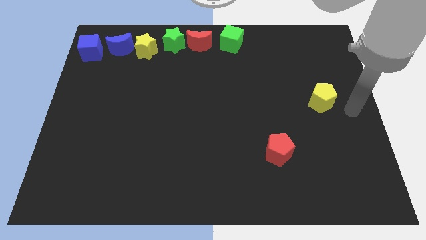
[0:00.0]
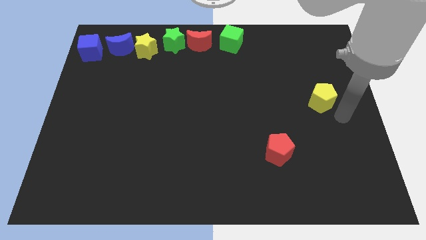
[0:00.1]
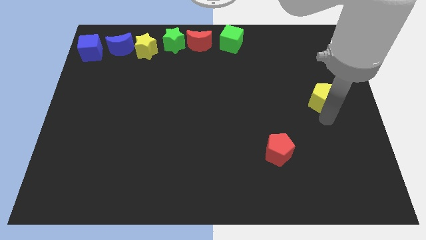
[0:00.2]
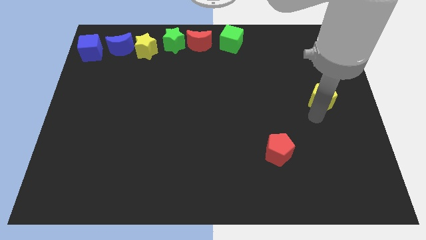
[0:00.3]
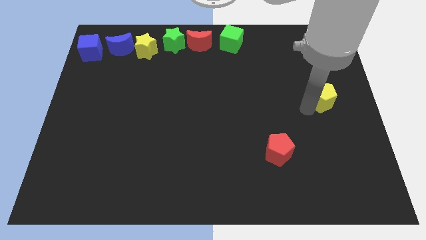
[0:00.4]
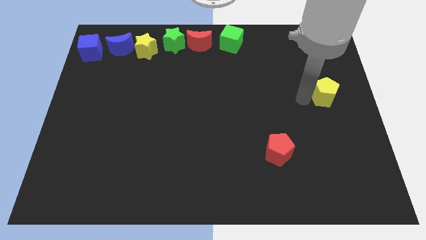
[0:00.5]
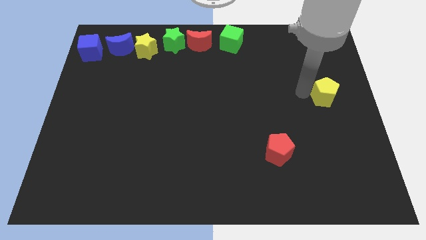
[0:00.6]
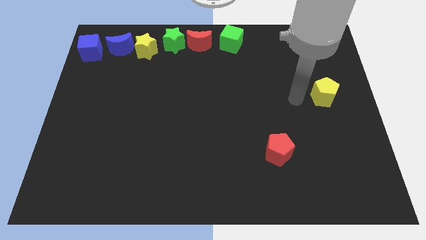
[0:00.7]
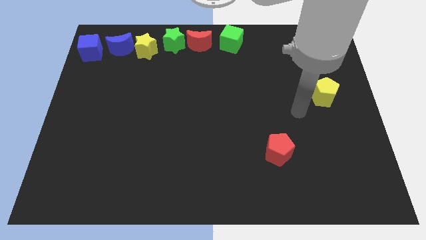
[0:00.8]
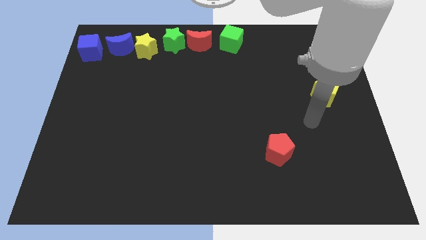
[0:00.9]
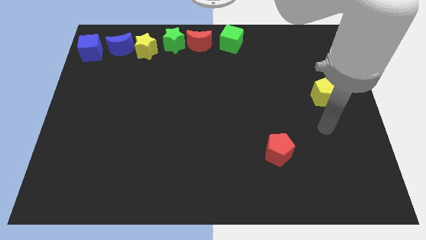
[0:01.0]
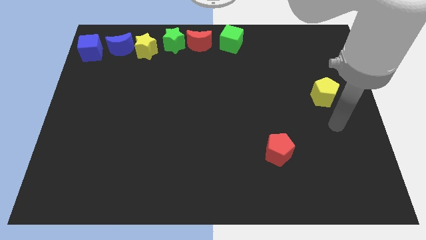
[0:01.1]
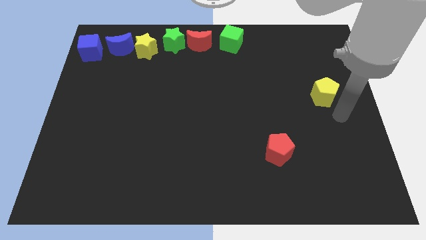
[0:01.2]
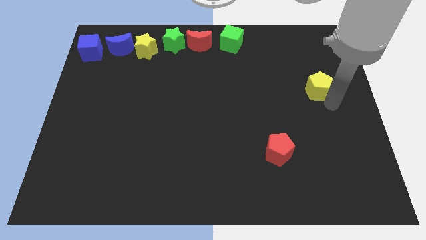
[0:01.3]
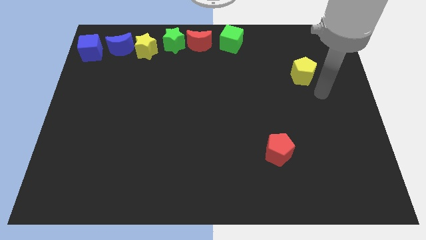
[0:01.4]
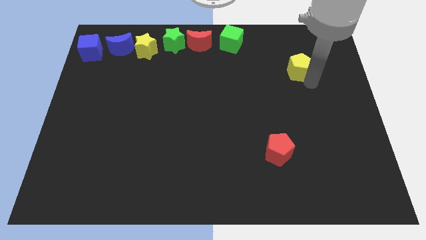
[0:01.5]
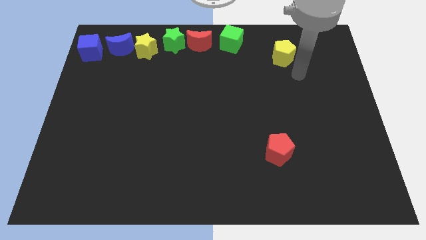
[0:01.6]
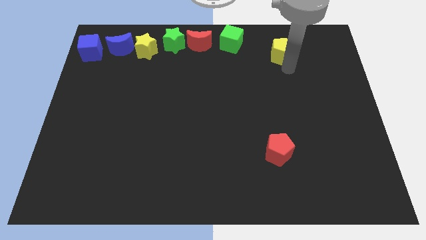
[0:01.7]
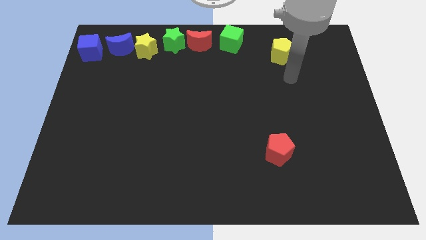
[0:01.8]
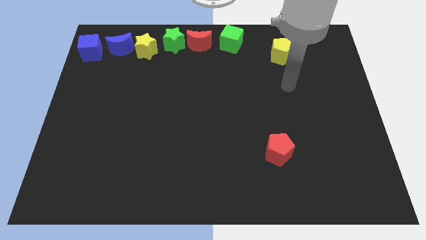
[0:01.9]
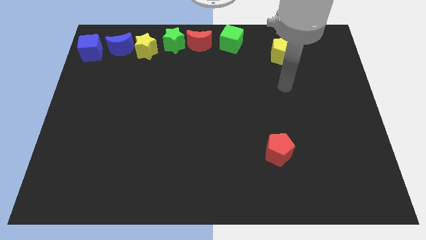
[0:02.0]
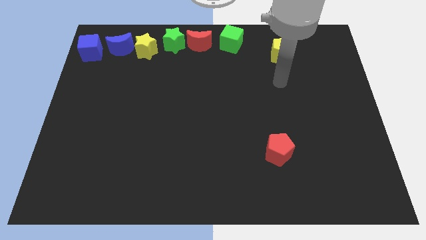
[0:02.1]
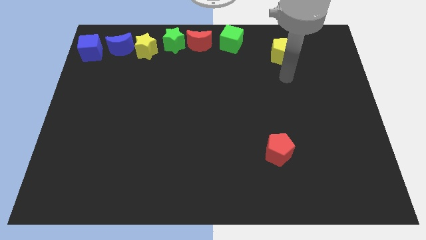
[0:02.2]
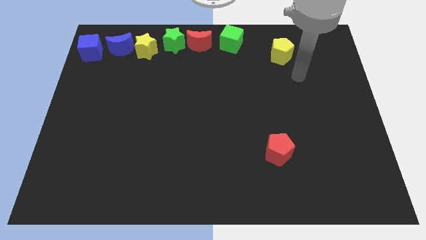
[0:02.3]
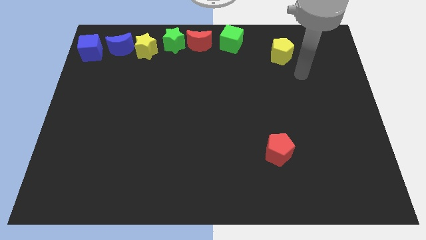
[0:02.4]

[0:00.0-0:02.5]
push the yellow pentagon slightly to the top of the board

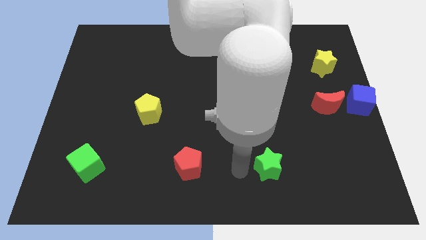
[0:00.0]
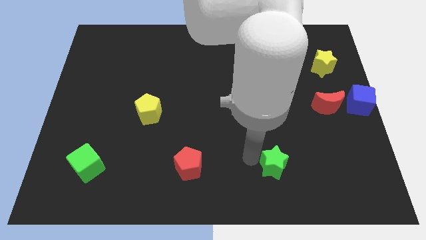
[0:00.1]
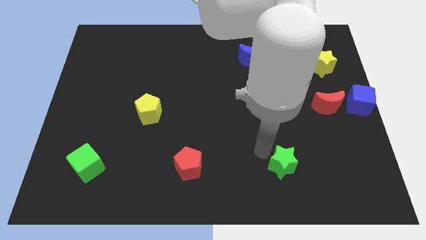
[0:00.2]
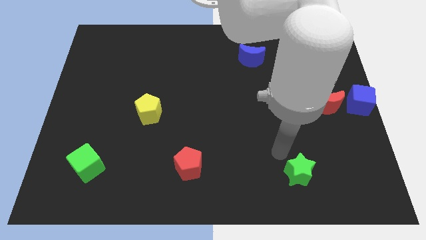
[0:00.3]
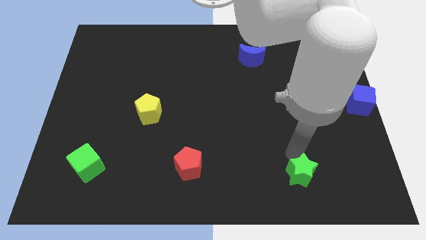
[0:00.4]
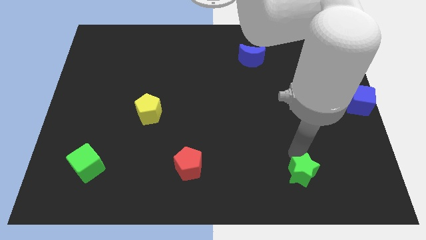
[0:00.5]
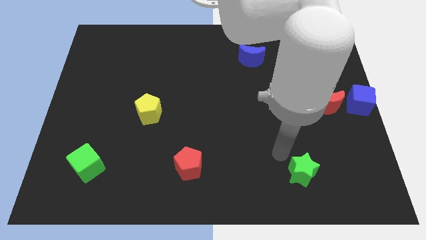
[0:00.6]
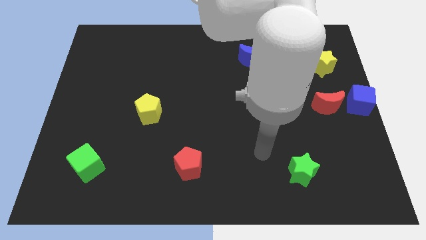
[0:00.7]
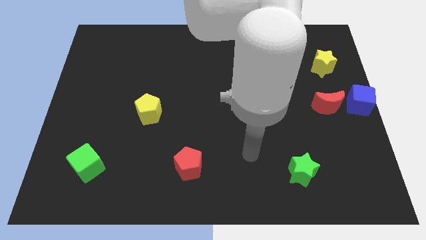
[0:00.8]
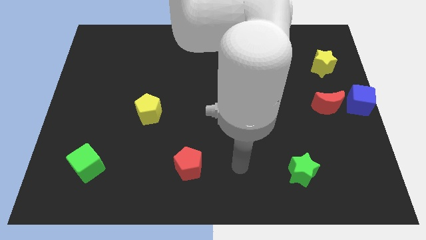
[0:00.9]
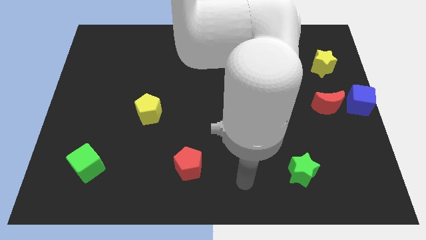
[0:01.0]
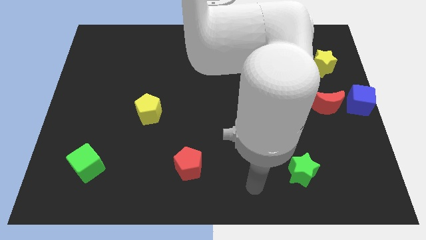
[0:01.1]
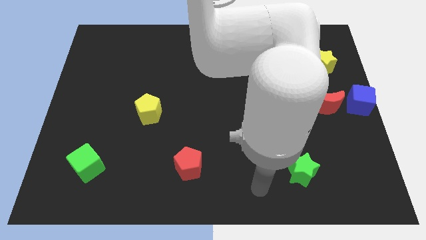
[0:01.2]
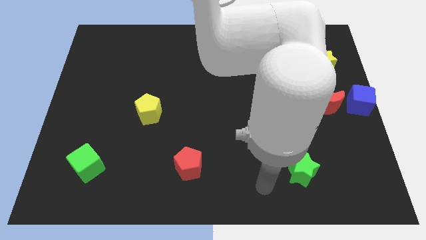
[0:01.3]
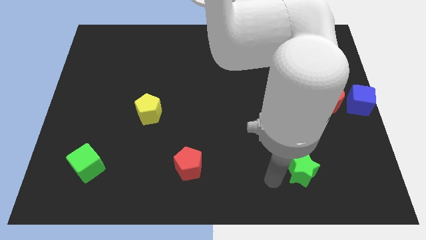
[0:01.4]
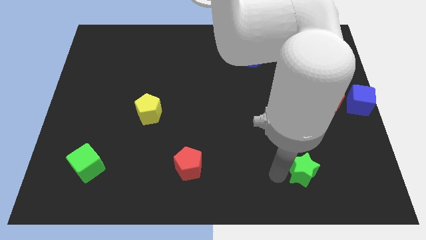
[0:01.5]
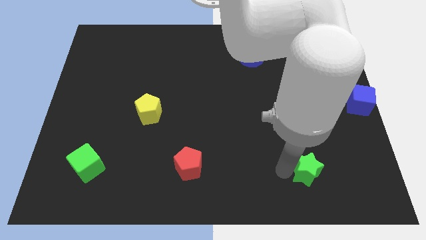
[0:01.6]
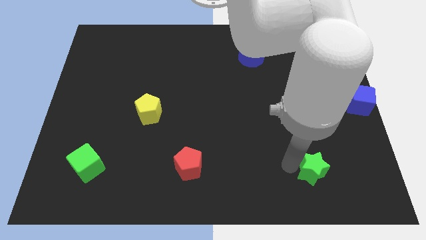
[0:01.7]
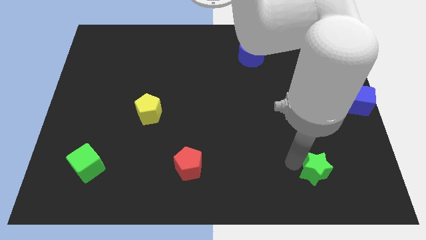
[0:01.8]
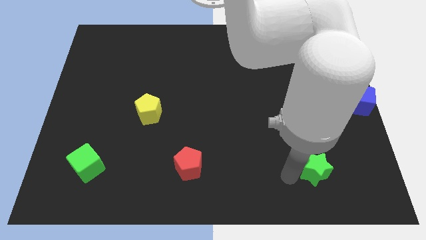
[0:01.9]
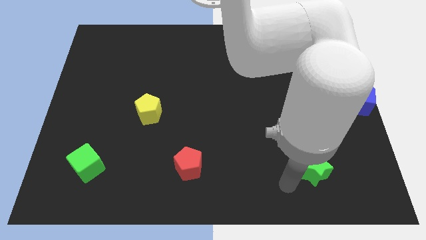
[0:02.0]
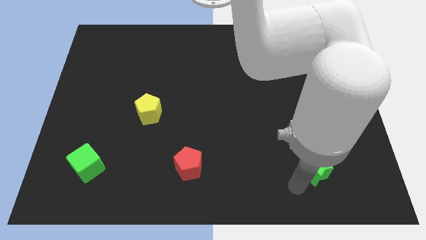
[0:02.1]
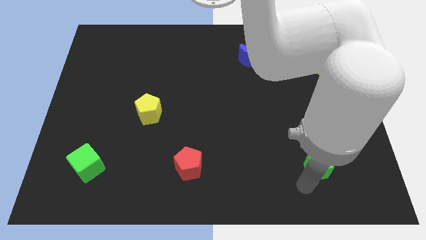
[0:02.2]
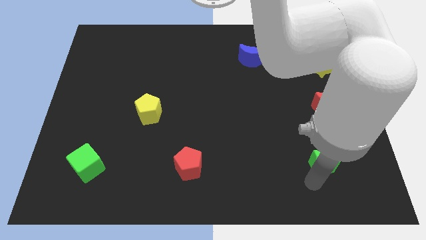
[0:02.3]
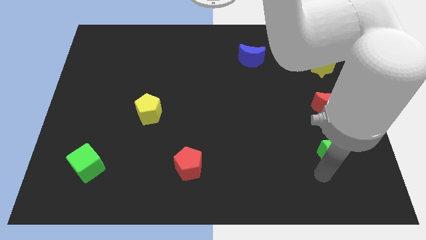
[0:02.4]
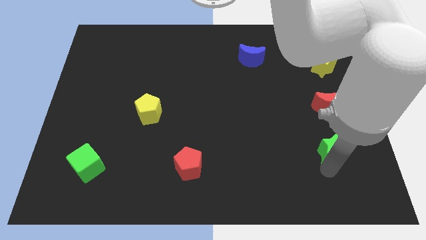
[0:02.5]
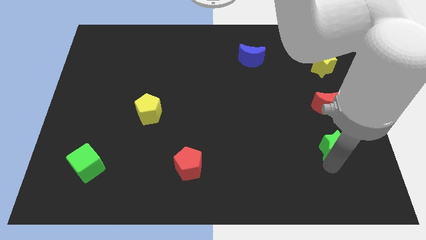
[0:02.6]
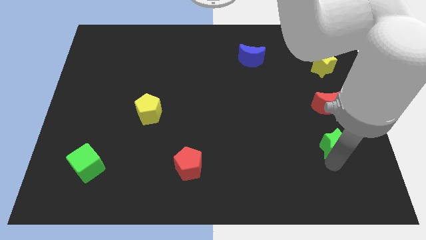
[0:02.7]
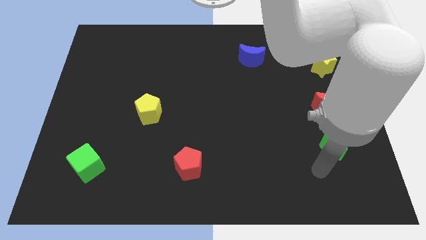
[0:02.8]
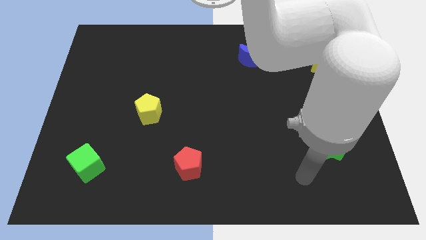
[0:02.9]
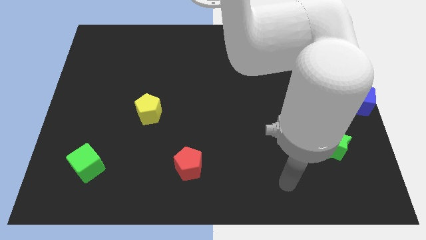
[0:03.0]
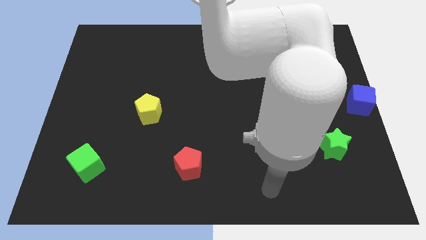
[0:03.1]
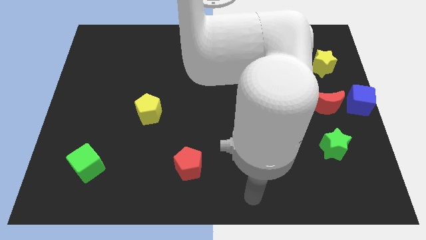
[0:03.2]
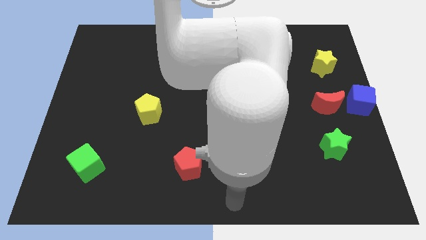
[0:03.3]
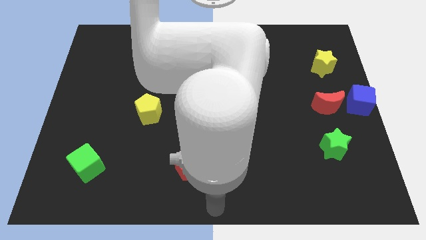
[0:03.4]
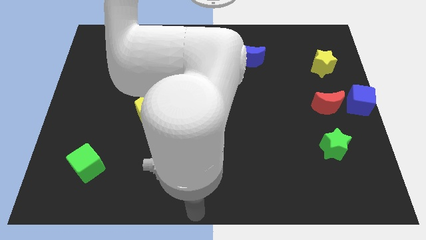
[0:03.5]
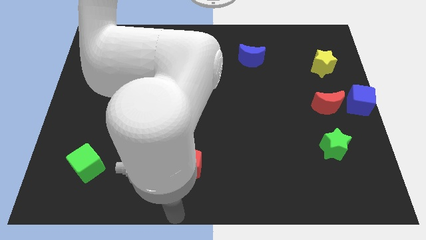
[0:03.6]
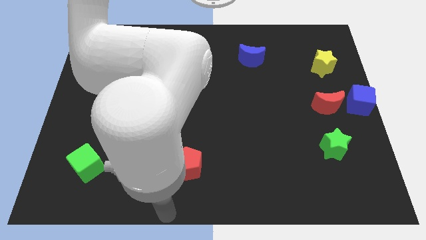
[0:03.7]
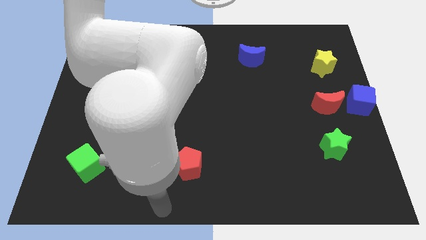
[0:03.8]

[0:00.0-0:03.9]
place the green star below the red crescent to form a vertical line

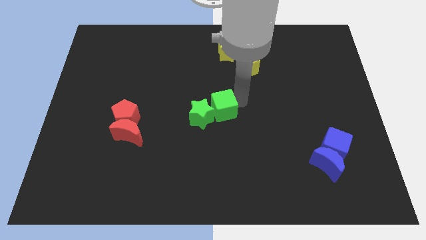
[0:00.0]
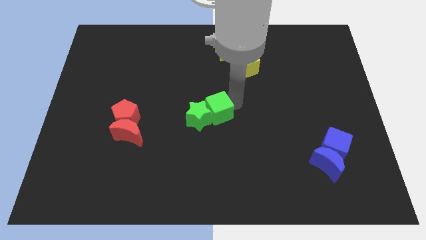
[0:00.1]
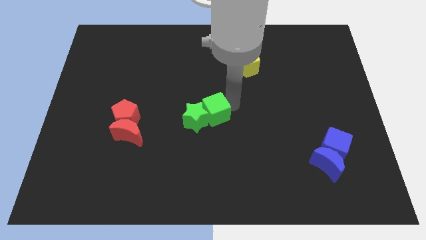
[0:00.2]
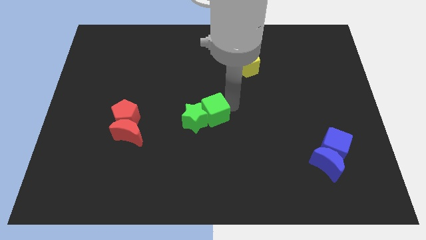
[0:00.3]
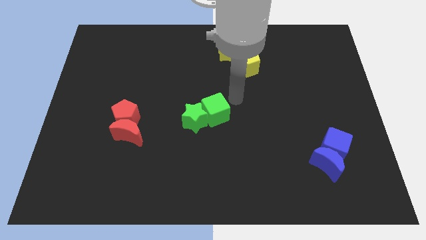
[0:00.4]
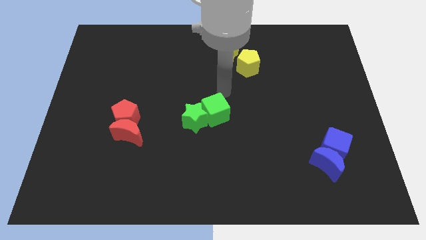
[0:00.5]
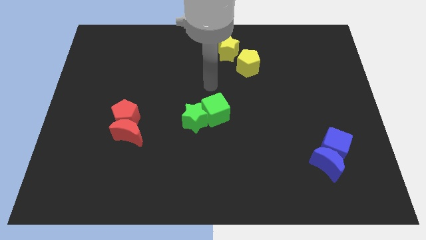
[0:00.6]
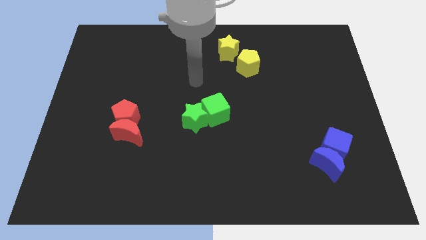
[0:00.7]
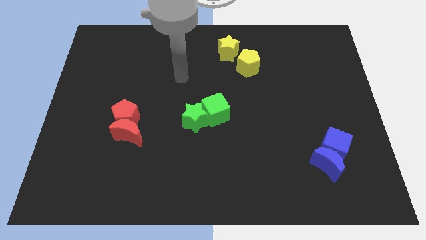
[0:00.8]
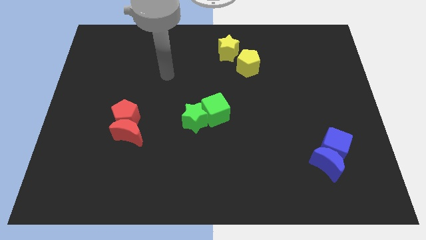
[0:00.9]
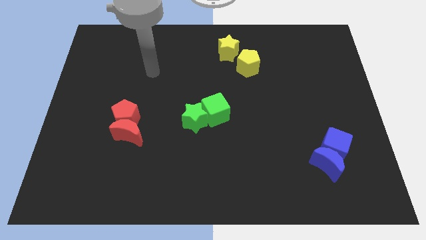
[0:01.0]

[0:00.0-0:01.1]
go away from the green cube

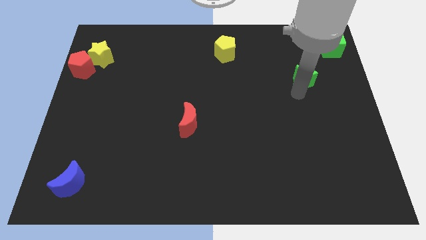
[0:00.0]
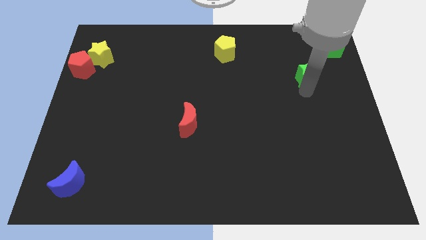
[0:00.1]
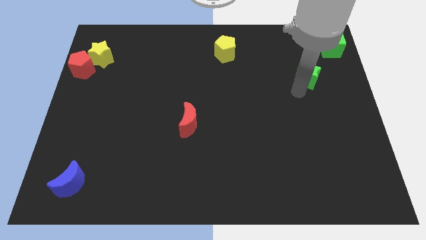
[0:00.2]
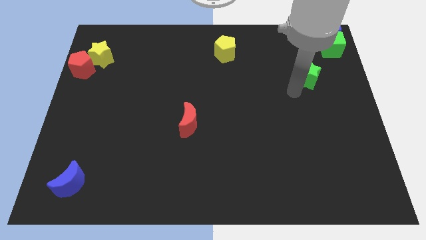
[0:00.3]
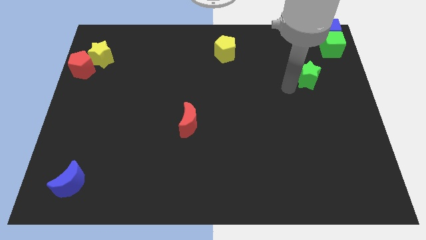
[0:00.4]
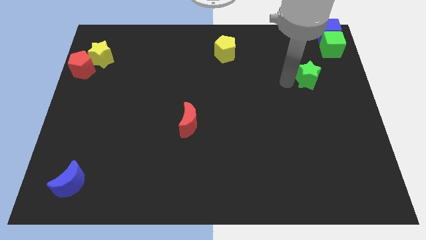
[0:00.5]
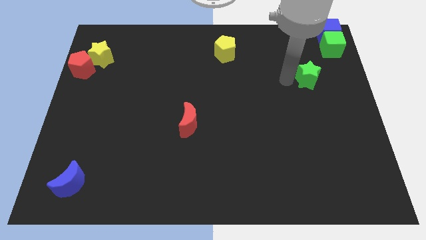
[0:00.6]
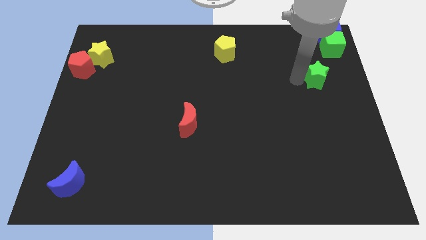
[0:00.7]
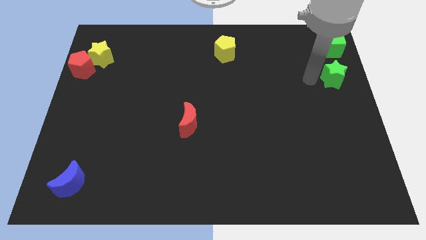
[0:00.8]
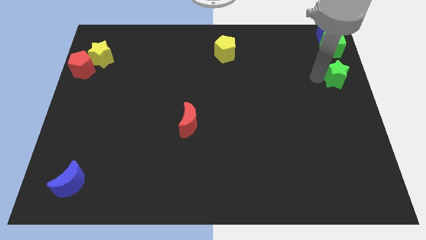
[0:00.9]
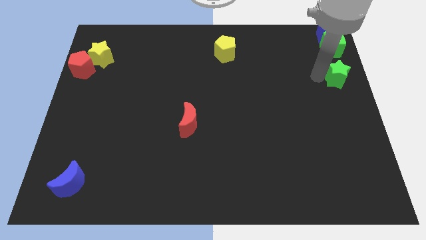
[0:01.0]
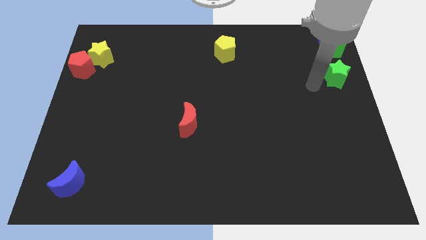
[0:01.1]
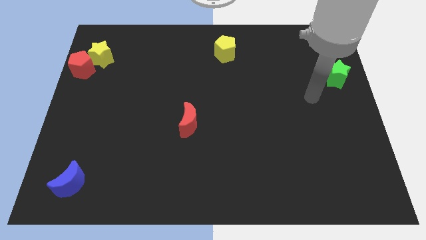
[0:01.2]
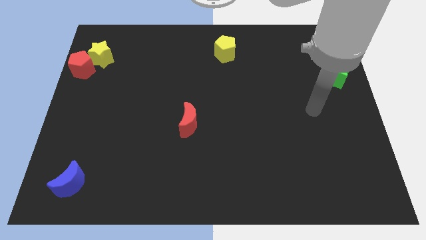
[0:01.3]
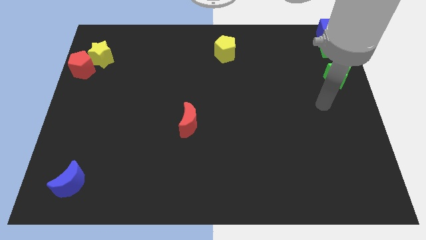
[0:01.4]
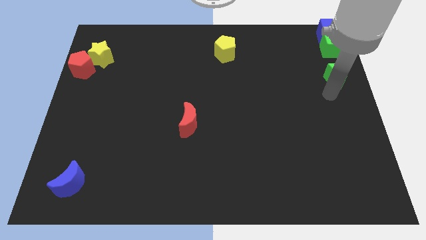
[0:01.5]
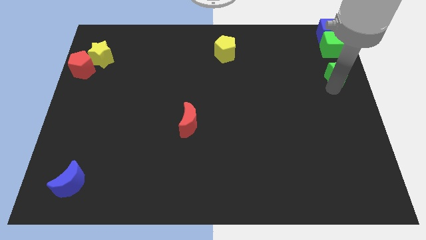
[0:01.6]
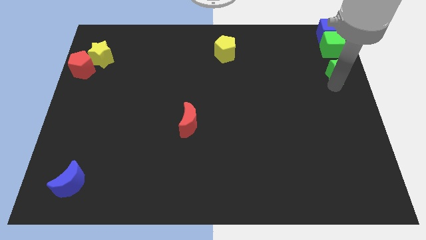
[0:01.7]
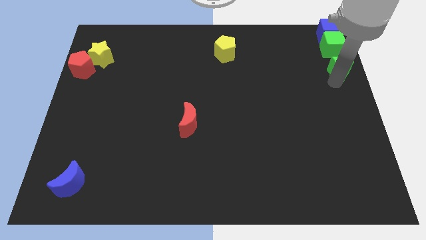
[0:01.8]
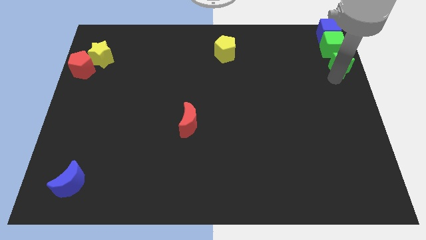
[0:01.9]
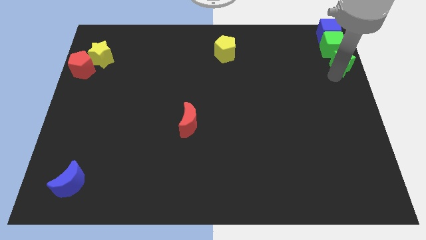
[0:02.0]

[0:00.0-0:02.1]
drag the green star at the bottom of the green cube
